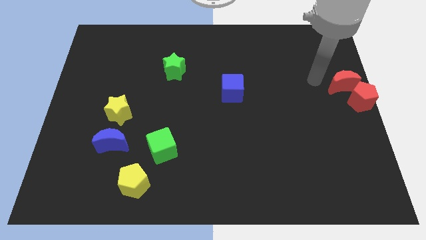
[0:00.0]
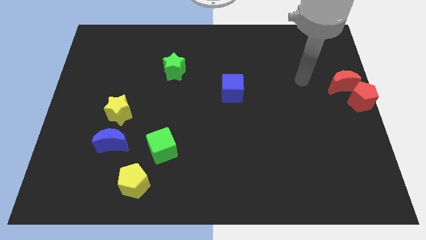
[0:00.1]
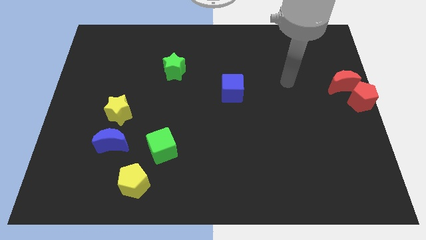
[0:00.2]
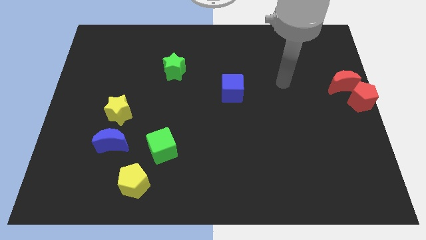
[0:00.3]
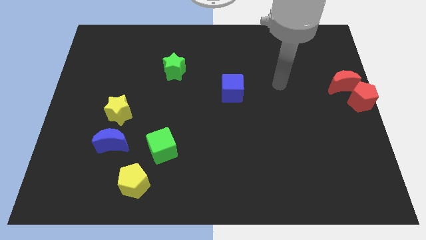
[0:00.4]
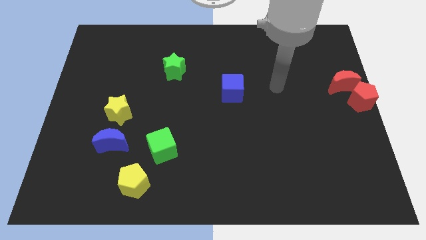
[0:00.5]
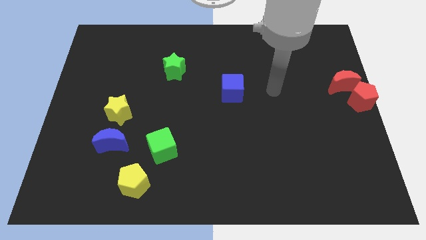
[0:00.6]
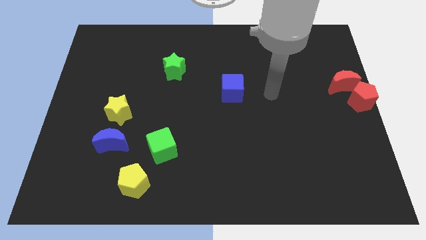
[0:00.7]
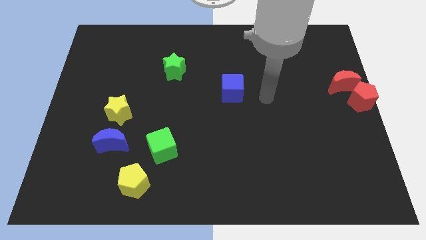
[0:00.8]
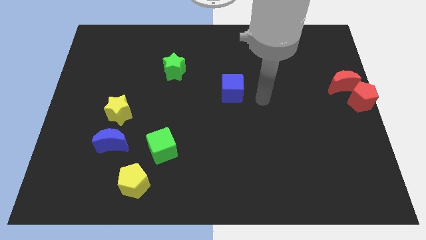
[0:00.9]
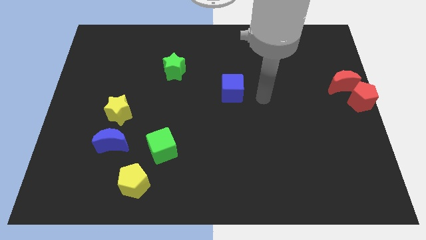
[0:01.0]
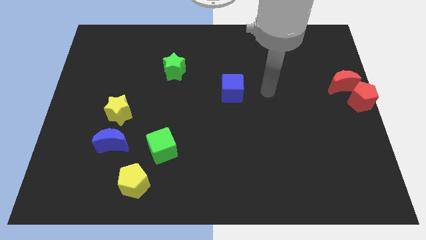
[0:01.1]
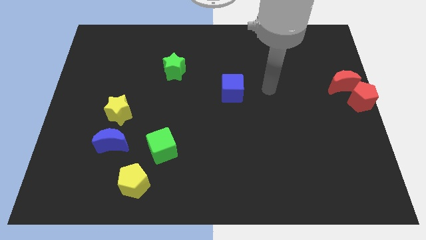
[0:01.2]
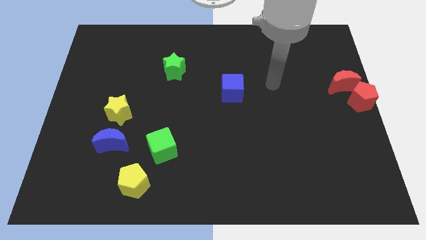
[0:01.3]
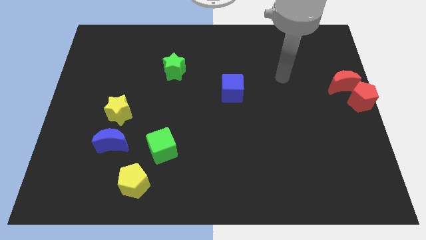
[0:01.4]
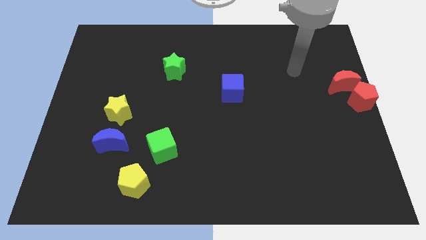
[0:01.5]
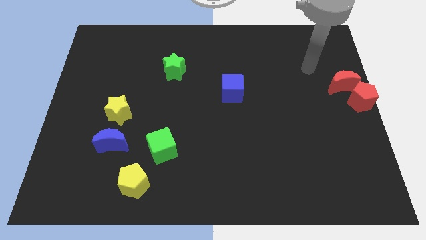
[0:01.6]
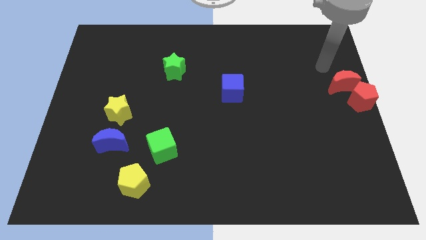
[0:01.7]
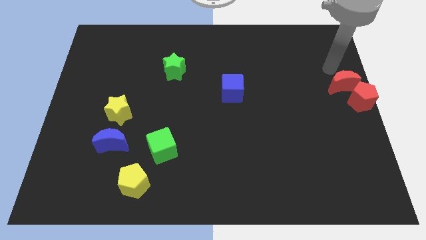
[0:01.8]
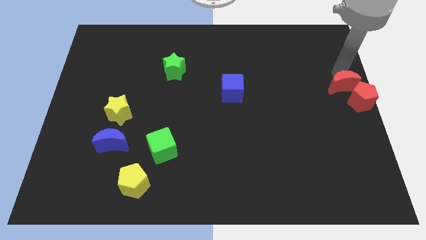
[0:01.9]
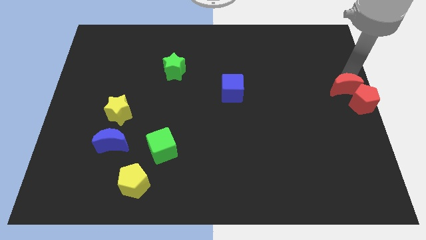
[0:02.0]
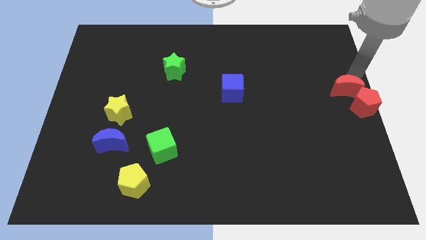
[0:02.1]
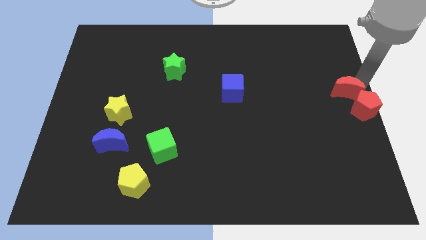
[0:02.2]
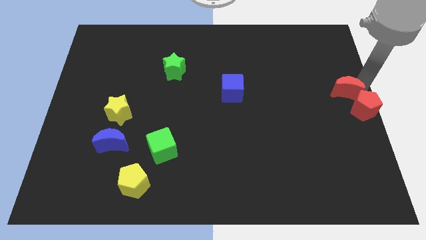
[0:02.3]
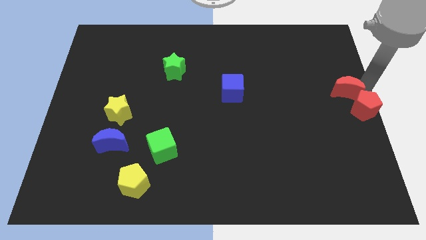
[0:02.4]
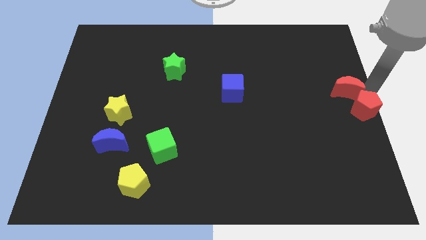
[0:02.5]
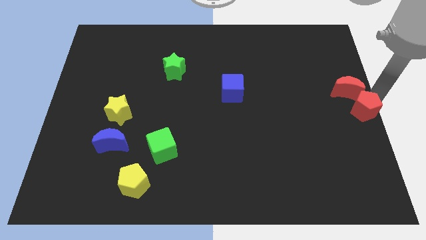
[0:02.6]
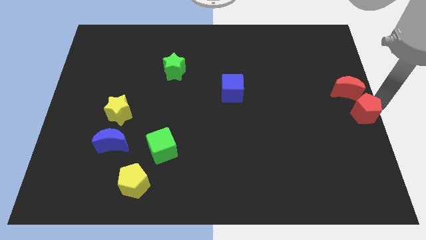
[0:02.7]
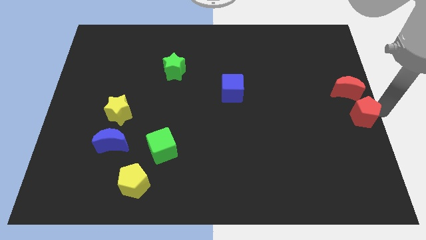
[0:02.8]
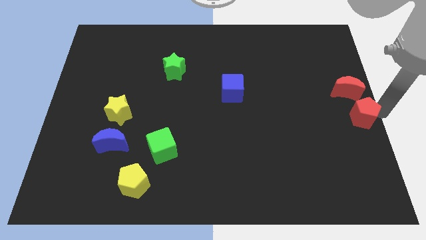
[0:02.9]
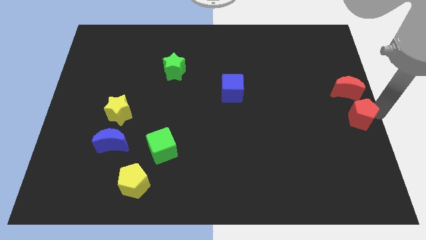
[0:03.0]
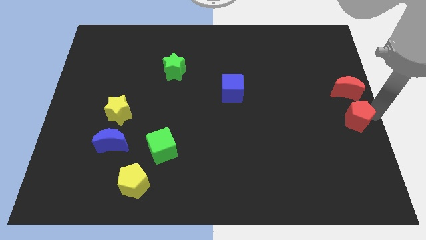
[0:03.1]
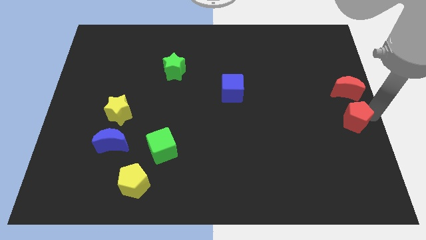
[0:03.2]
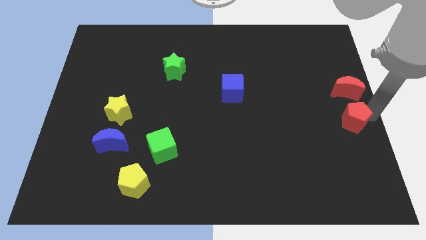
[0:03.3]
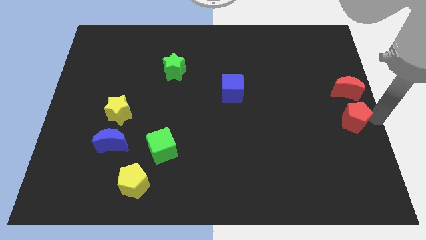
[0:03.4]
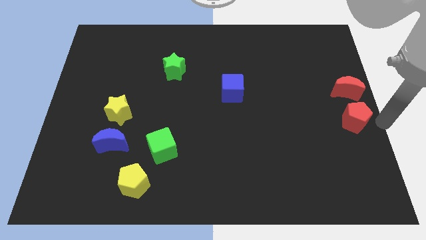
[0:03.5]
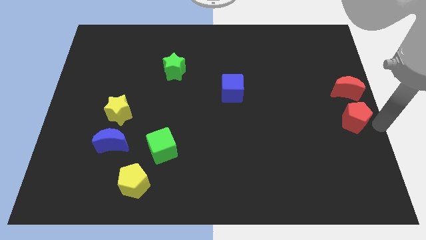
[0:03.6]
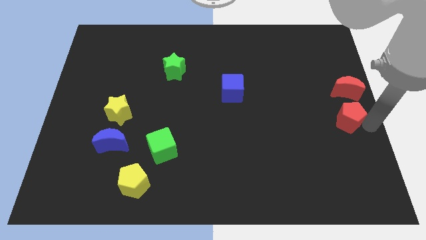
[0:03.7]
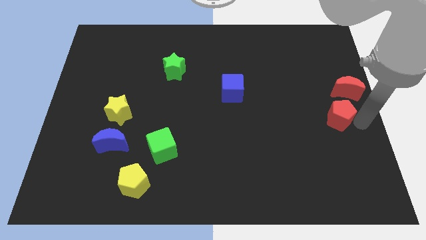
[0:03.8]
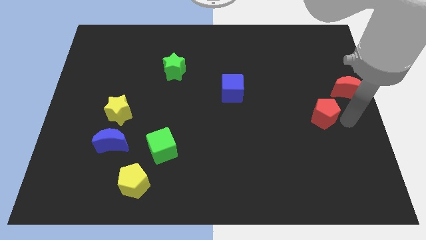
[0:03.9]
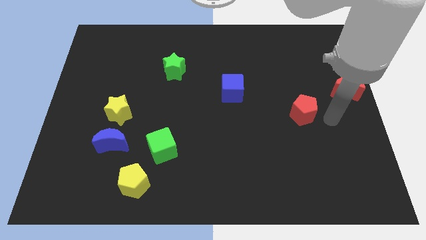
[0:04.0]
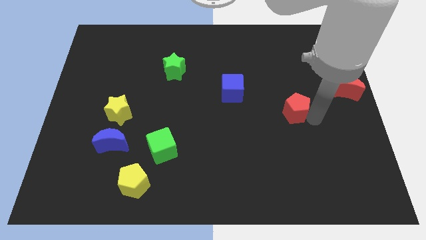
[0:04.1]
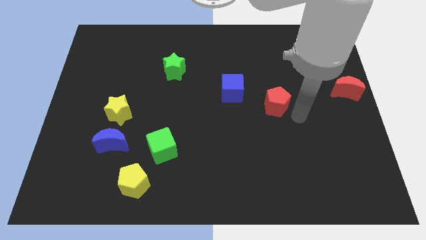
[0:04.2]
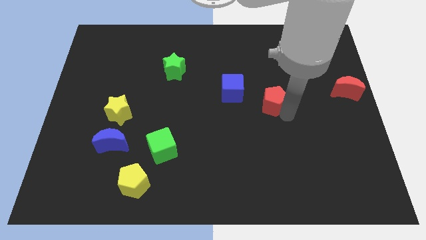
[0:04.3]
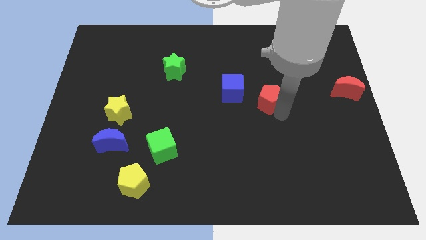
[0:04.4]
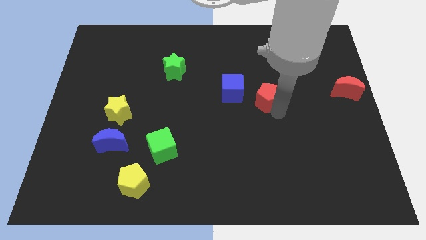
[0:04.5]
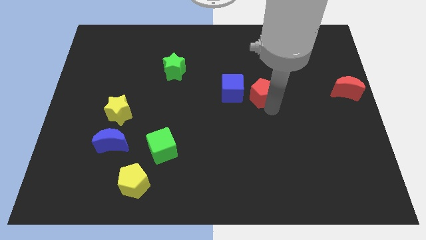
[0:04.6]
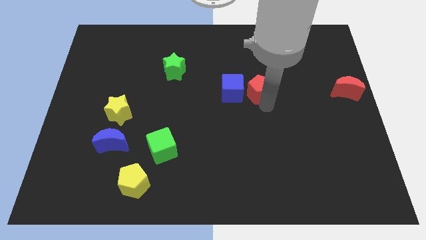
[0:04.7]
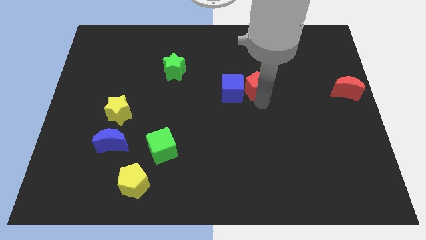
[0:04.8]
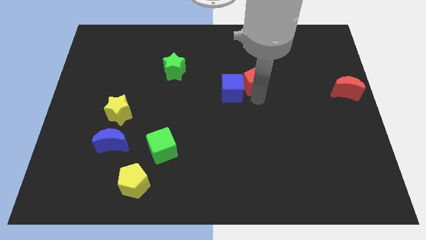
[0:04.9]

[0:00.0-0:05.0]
push the red pentagon to the right of the blue cube

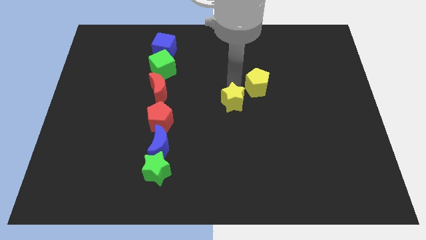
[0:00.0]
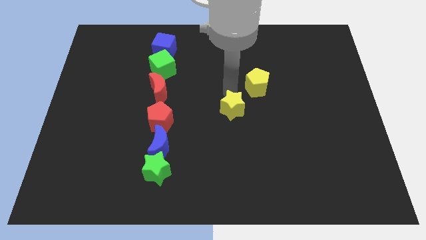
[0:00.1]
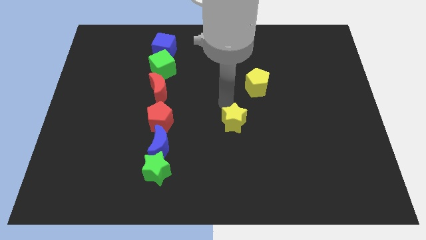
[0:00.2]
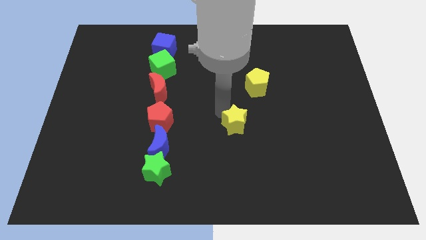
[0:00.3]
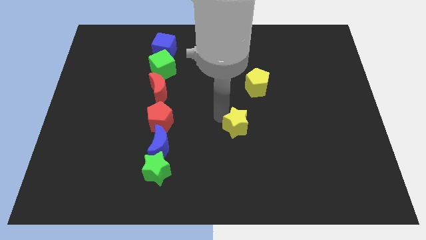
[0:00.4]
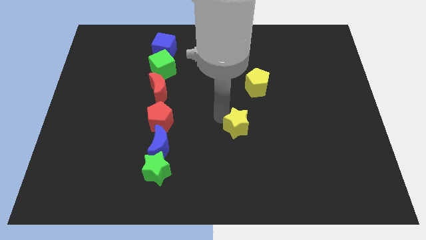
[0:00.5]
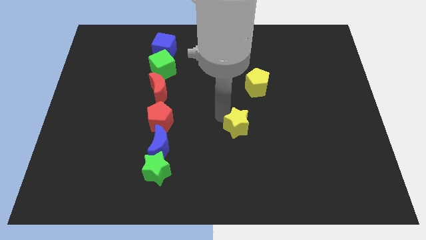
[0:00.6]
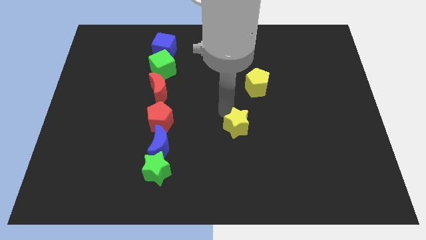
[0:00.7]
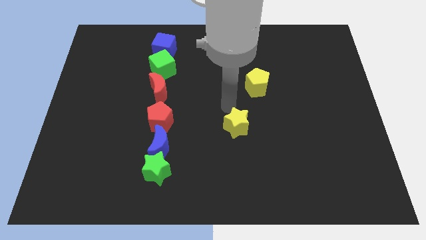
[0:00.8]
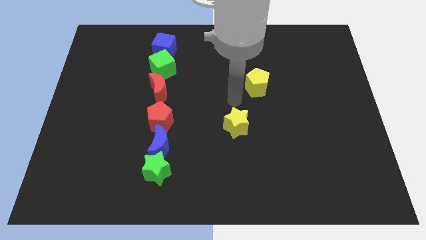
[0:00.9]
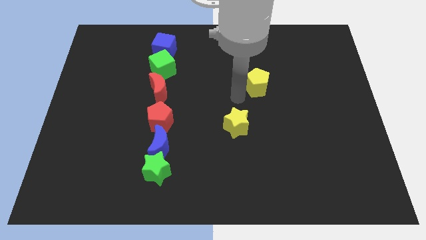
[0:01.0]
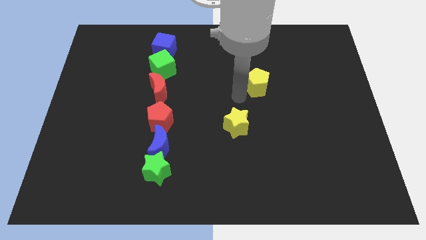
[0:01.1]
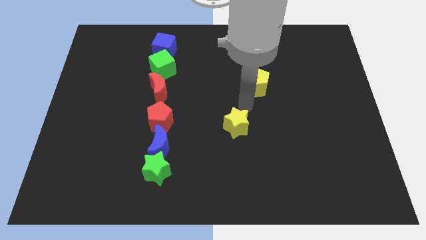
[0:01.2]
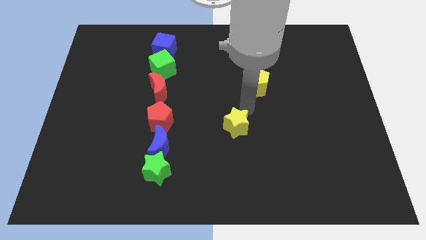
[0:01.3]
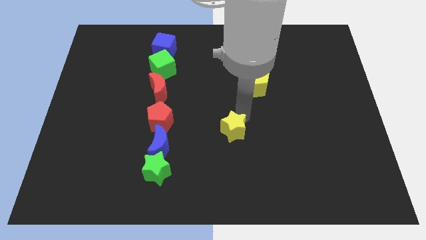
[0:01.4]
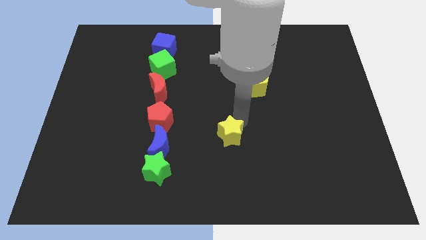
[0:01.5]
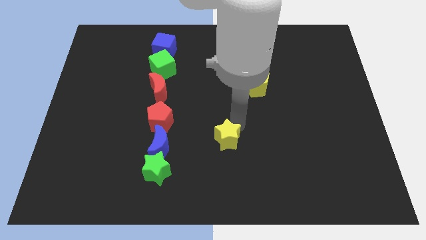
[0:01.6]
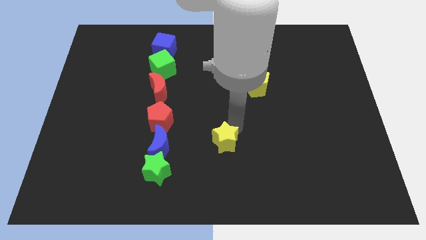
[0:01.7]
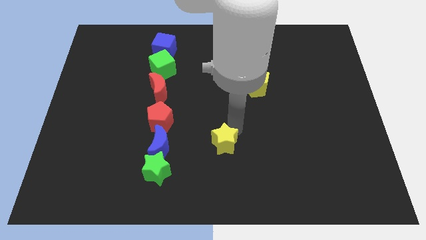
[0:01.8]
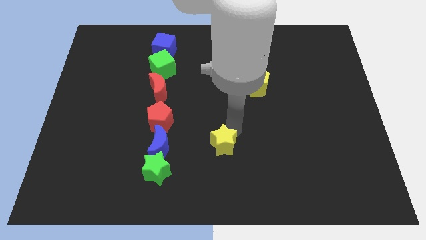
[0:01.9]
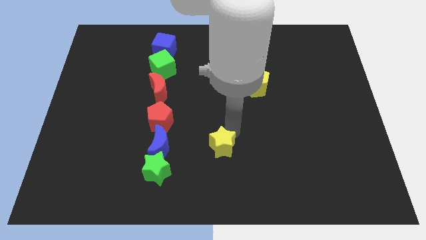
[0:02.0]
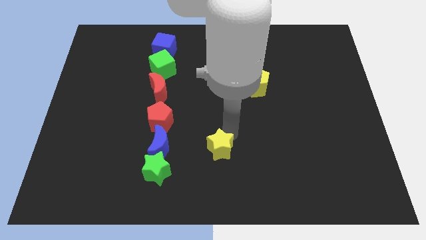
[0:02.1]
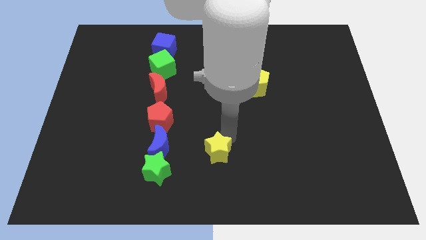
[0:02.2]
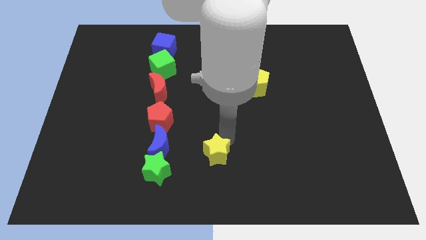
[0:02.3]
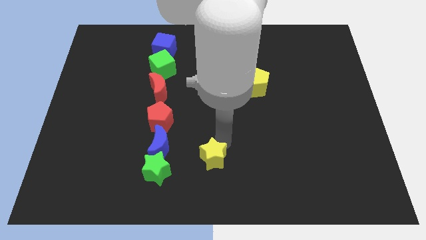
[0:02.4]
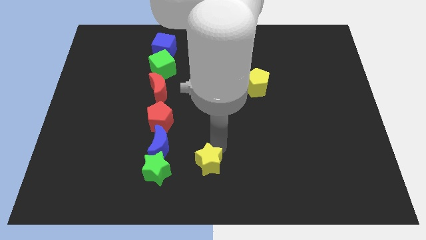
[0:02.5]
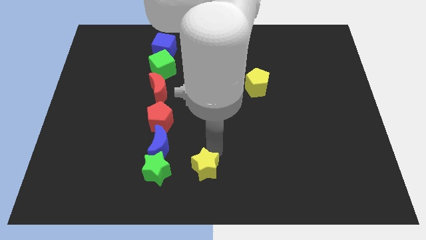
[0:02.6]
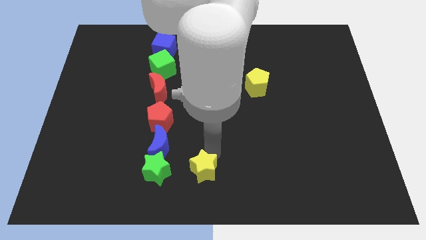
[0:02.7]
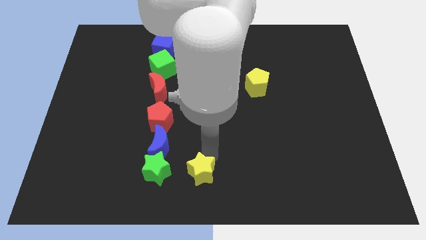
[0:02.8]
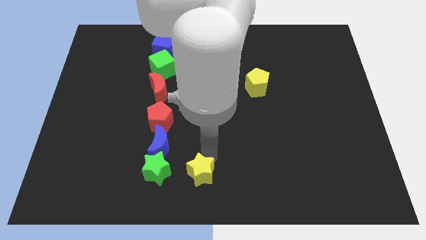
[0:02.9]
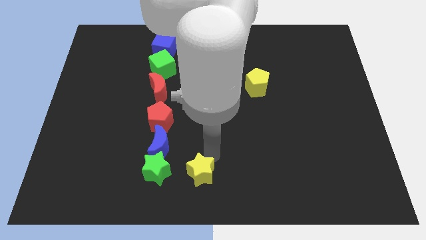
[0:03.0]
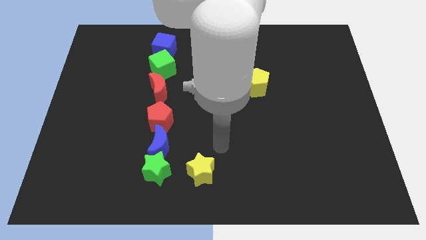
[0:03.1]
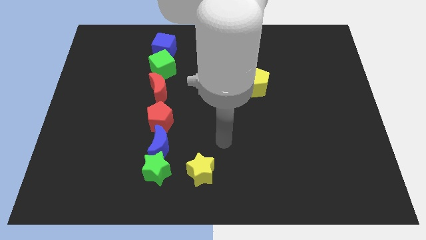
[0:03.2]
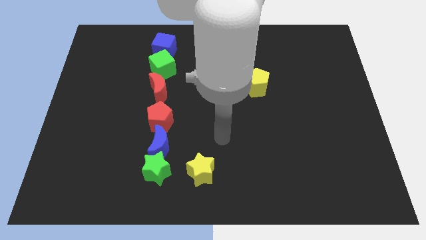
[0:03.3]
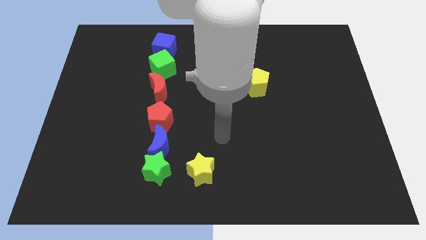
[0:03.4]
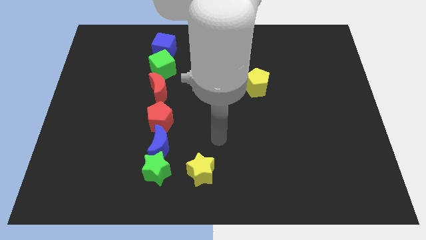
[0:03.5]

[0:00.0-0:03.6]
place the yellow star right to the green star

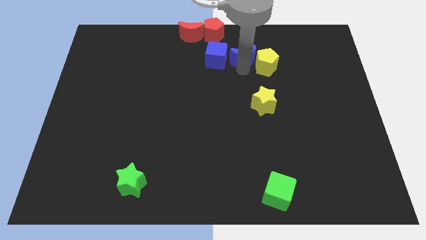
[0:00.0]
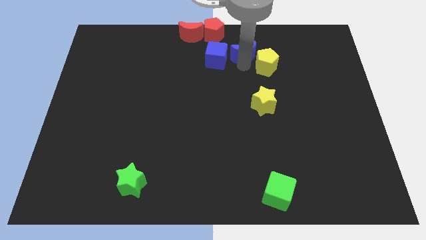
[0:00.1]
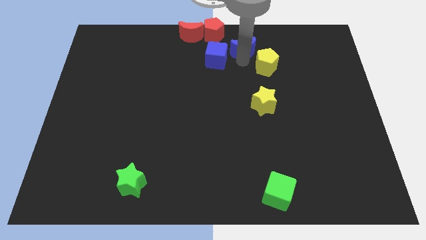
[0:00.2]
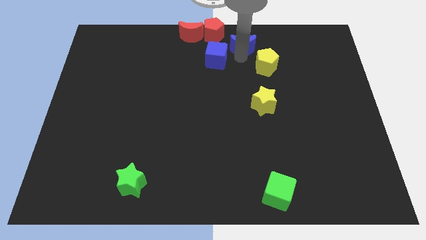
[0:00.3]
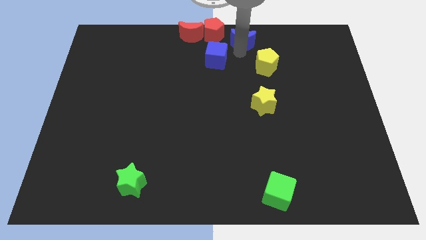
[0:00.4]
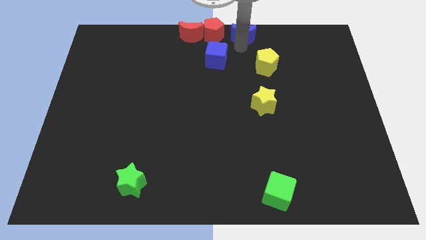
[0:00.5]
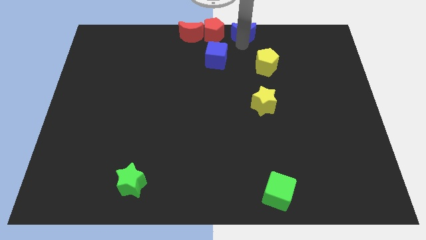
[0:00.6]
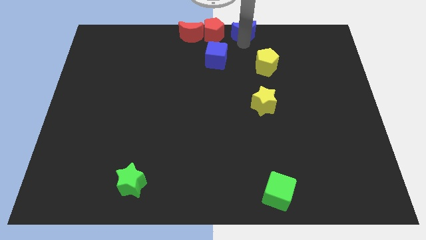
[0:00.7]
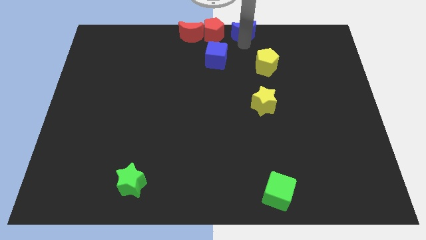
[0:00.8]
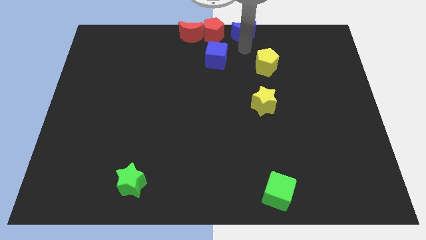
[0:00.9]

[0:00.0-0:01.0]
move the blue crescent to the right of the red pentagon
